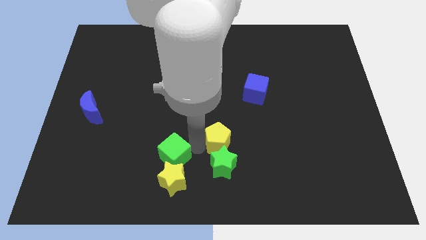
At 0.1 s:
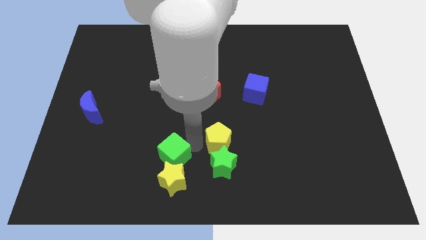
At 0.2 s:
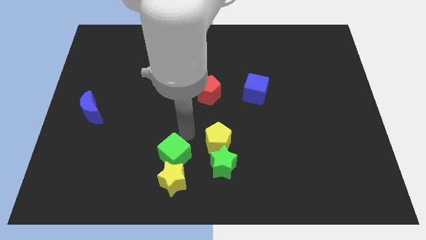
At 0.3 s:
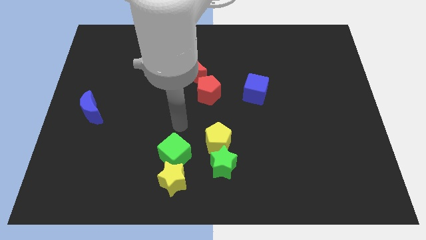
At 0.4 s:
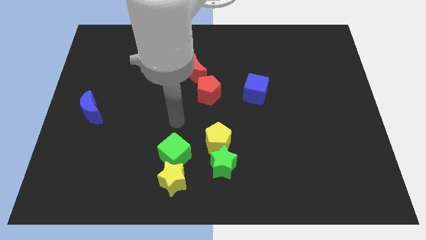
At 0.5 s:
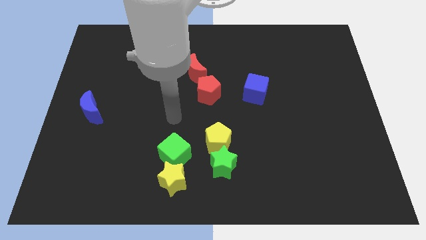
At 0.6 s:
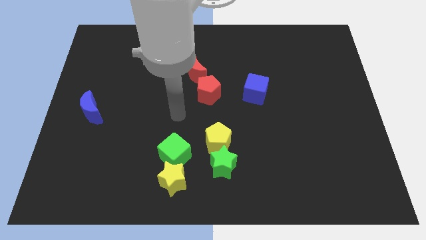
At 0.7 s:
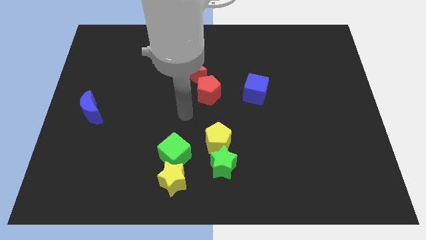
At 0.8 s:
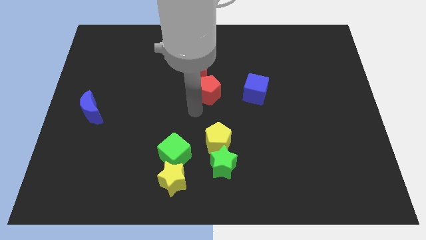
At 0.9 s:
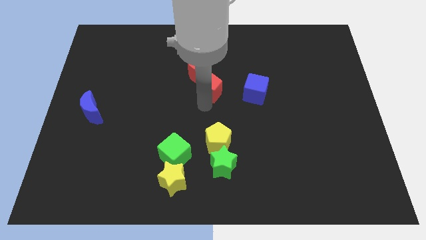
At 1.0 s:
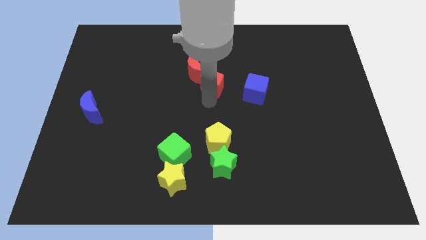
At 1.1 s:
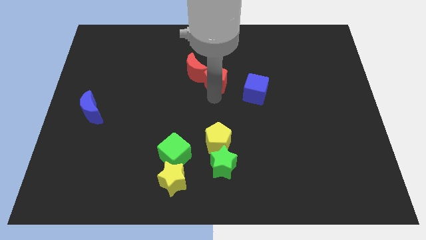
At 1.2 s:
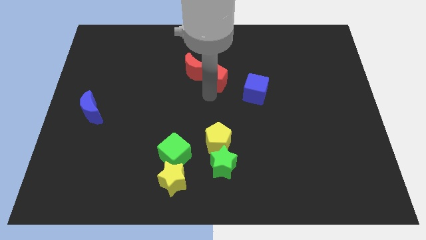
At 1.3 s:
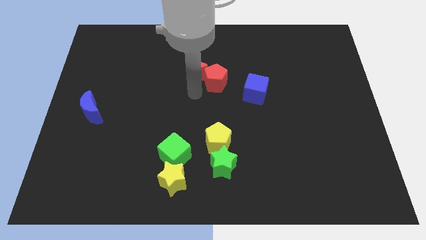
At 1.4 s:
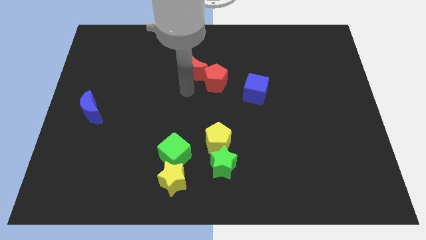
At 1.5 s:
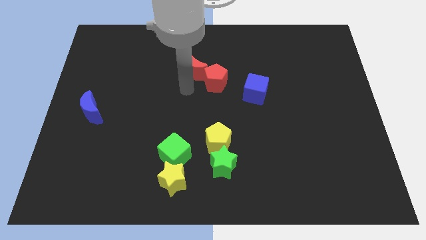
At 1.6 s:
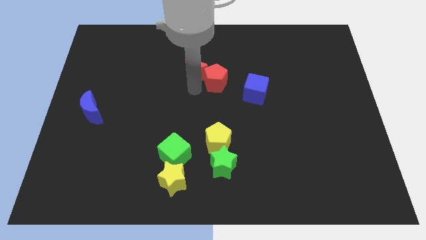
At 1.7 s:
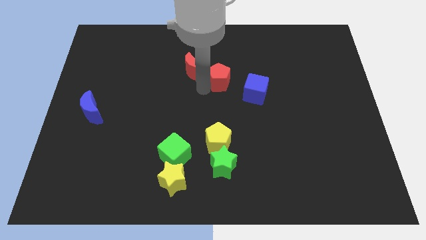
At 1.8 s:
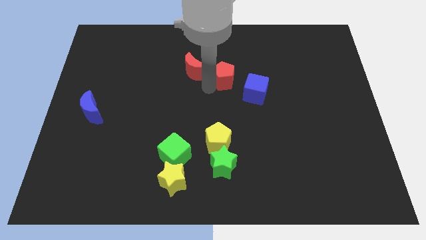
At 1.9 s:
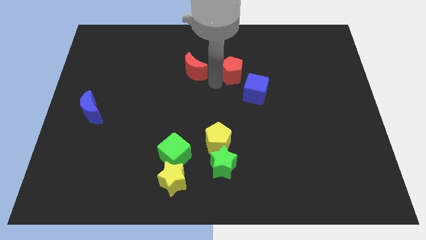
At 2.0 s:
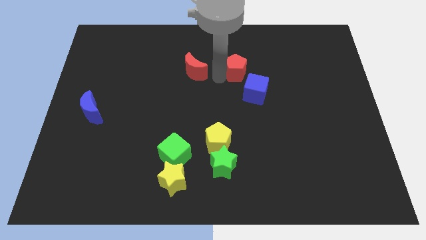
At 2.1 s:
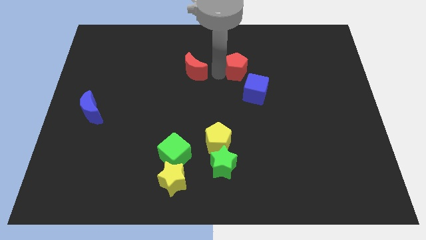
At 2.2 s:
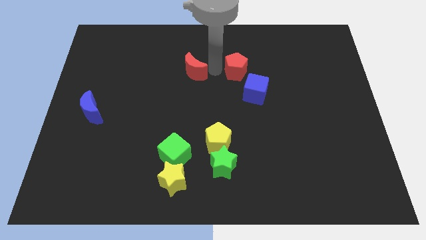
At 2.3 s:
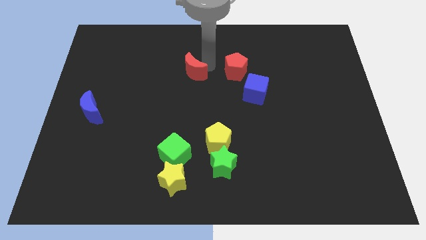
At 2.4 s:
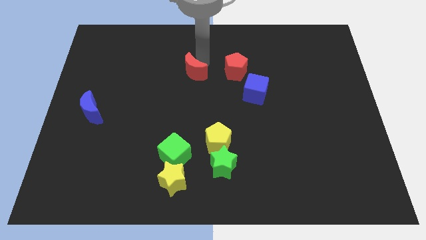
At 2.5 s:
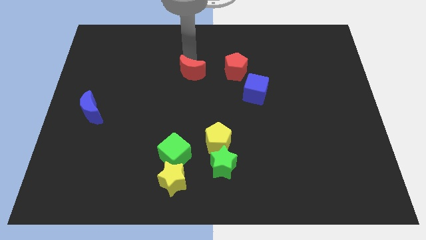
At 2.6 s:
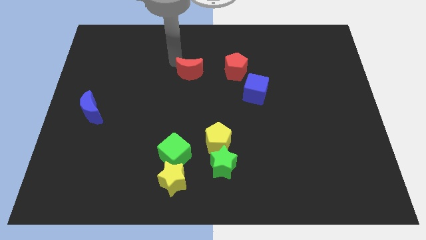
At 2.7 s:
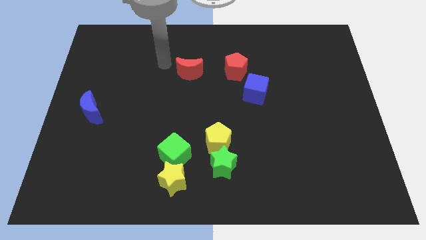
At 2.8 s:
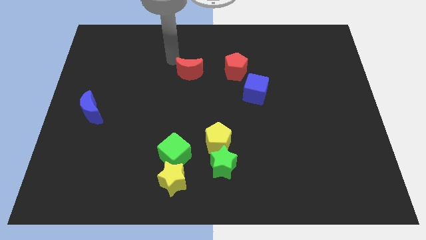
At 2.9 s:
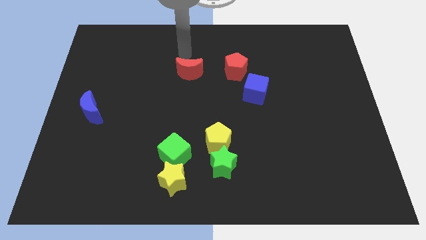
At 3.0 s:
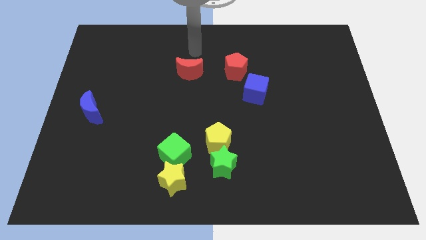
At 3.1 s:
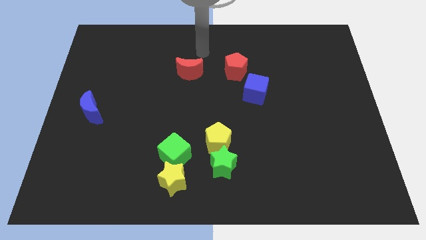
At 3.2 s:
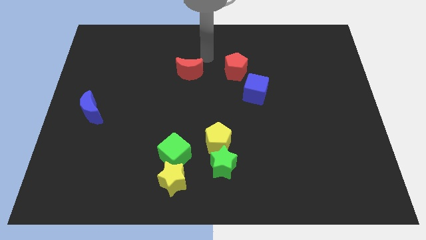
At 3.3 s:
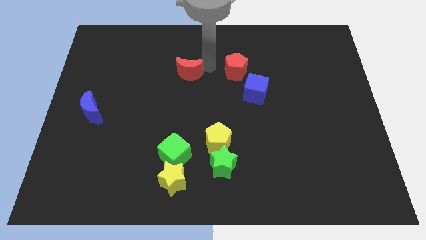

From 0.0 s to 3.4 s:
slightly push the red pentagon towrads the blue cube

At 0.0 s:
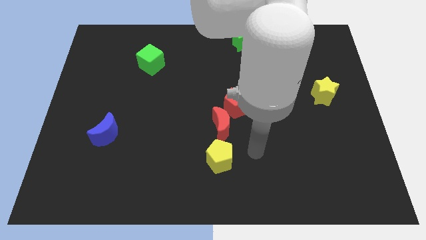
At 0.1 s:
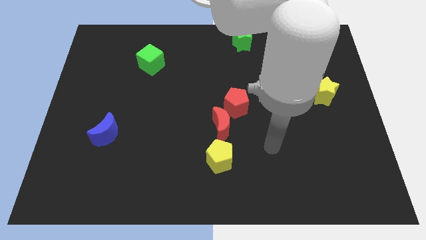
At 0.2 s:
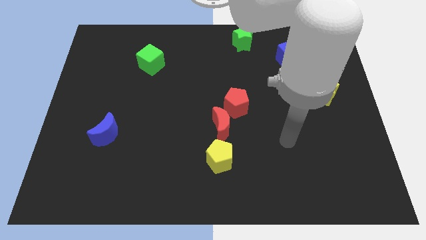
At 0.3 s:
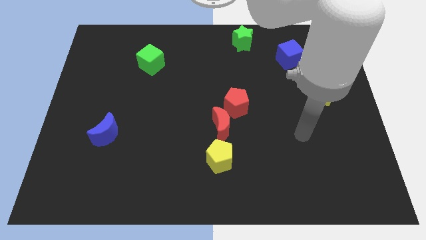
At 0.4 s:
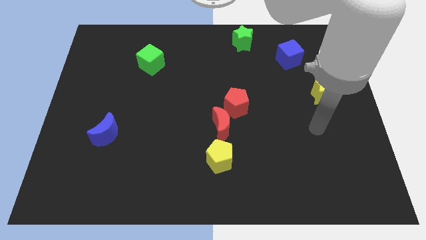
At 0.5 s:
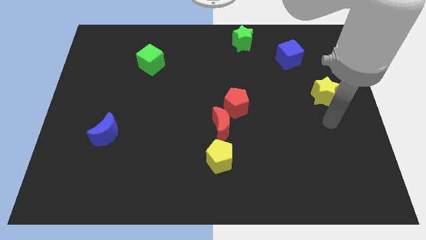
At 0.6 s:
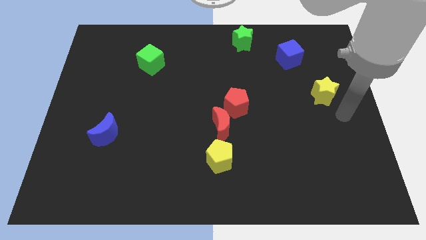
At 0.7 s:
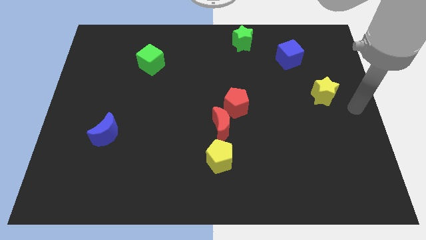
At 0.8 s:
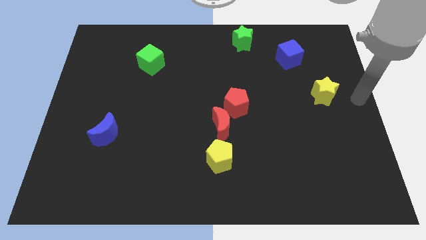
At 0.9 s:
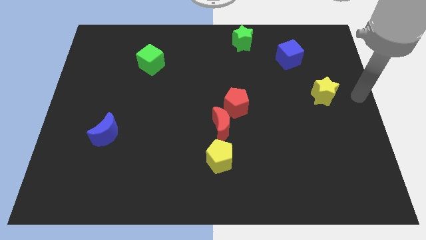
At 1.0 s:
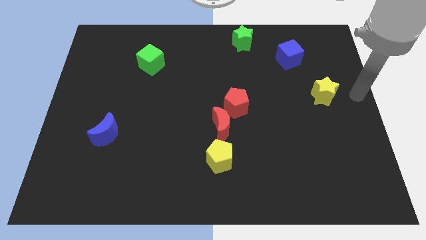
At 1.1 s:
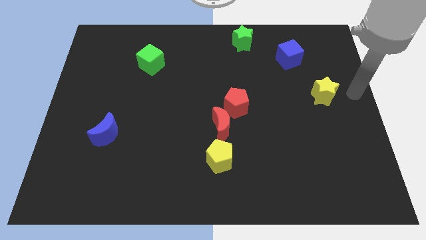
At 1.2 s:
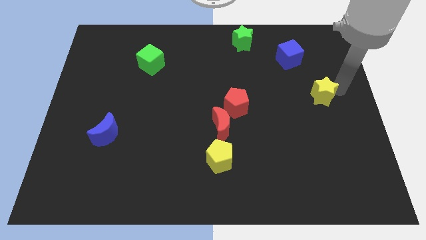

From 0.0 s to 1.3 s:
point the arm to the right of the yellow star

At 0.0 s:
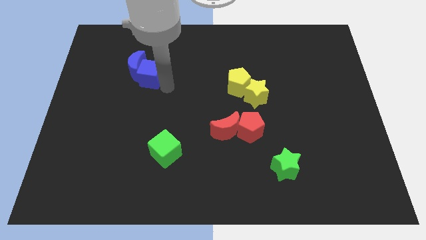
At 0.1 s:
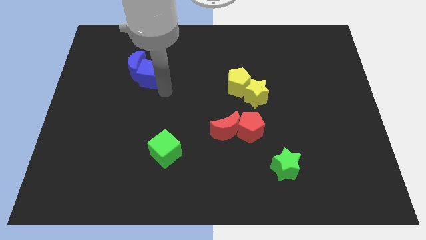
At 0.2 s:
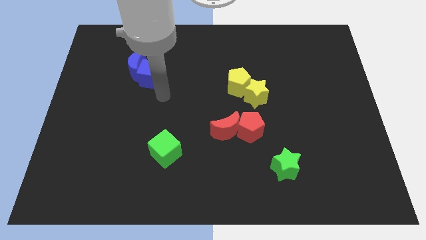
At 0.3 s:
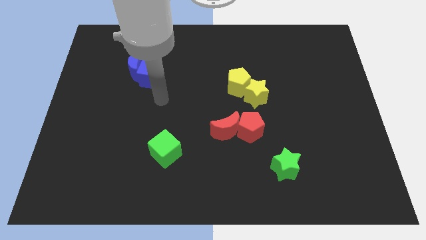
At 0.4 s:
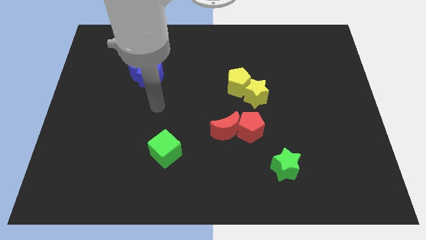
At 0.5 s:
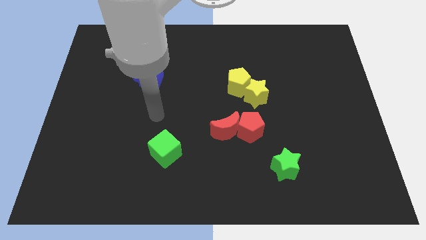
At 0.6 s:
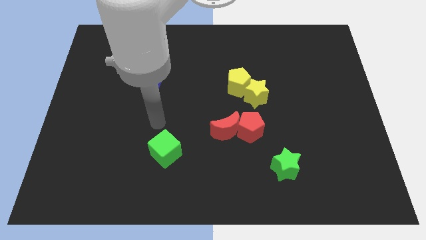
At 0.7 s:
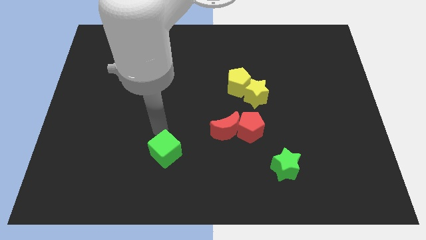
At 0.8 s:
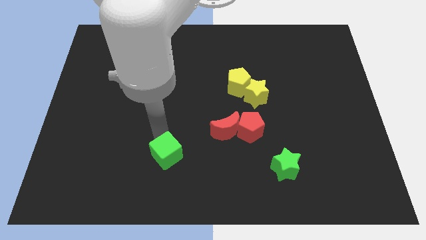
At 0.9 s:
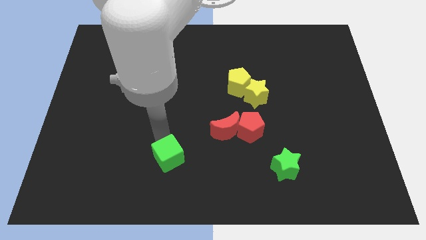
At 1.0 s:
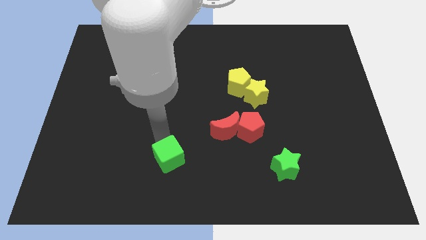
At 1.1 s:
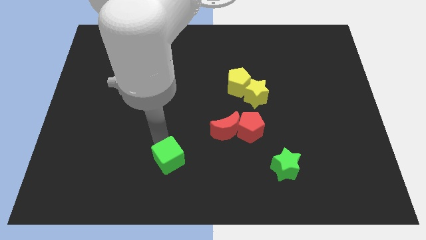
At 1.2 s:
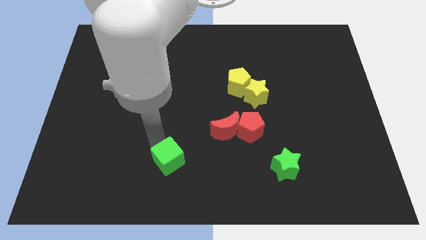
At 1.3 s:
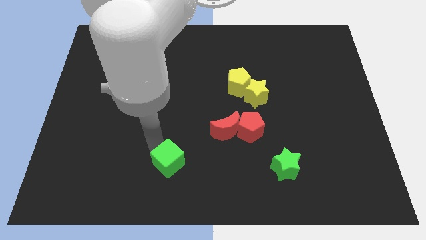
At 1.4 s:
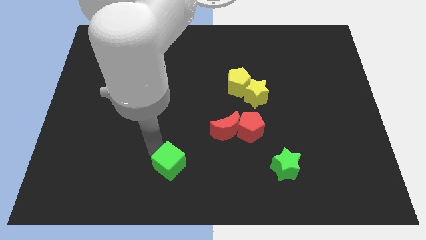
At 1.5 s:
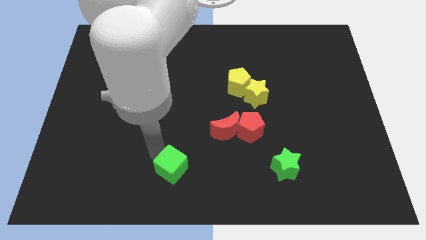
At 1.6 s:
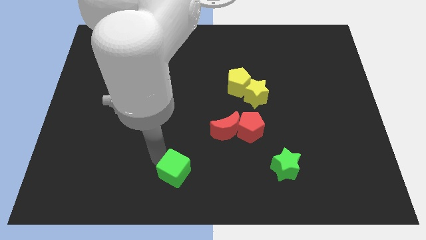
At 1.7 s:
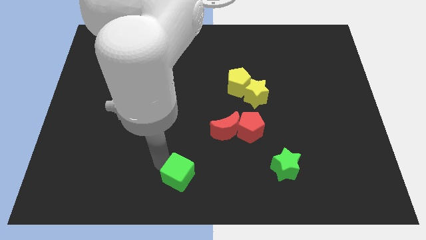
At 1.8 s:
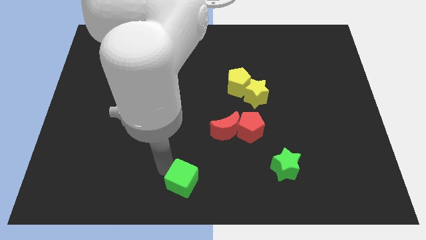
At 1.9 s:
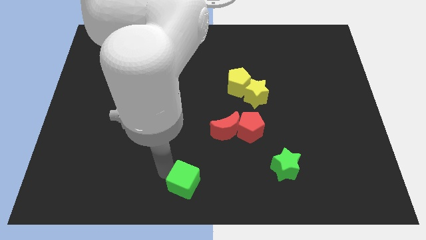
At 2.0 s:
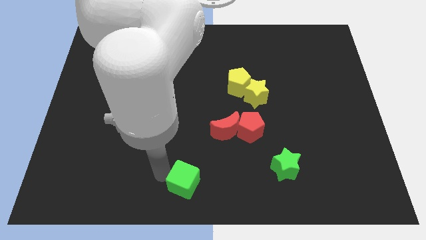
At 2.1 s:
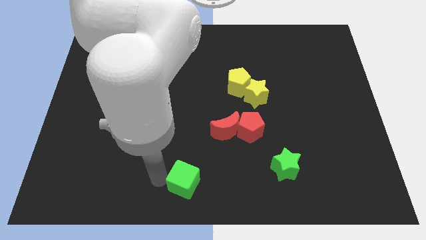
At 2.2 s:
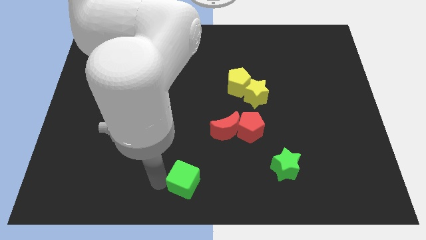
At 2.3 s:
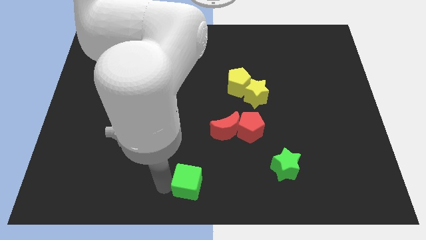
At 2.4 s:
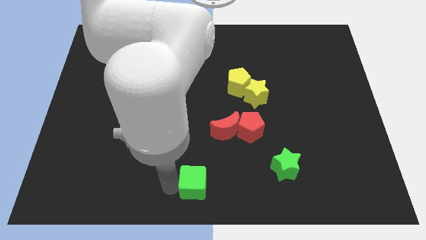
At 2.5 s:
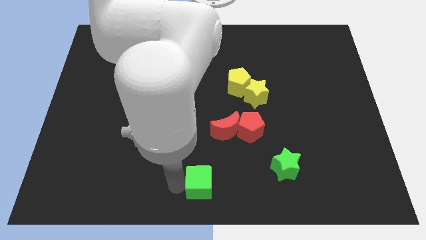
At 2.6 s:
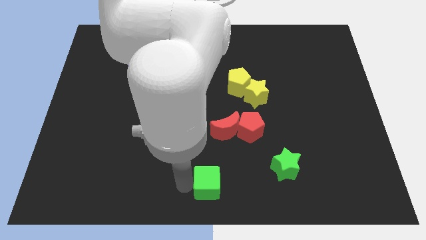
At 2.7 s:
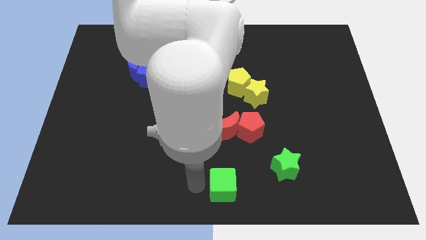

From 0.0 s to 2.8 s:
move the green cube to the bottom centre of the board

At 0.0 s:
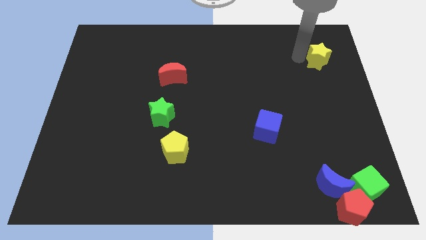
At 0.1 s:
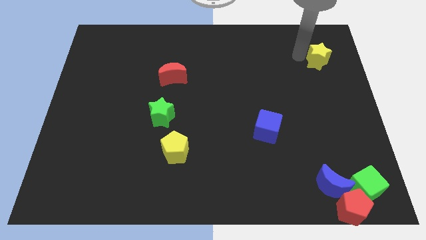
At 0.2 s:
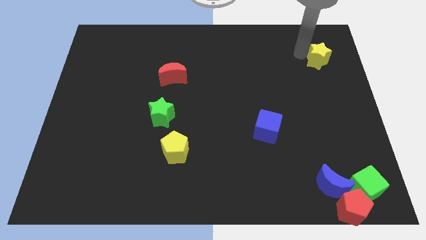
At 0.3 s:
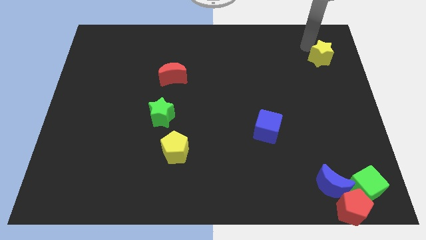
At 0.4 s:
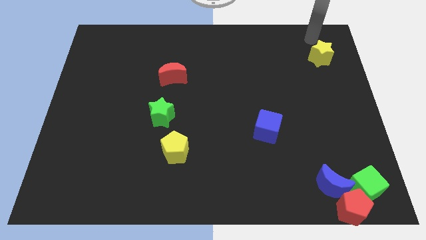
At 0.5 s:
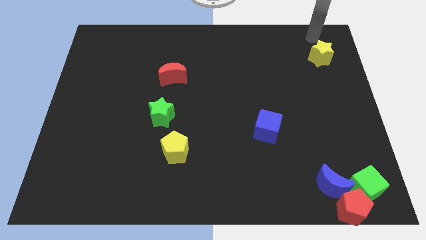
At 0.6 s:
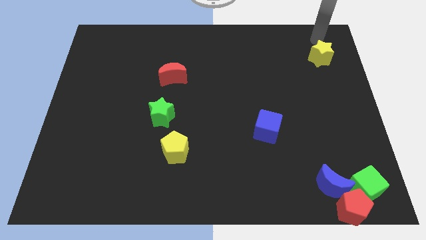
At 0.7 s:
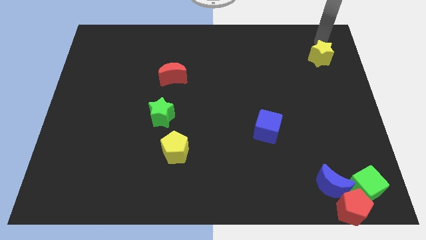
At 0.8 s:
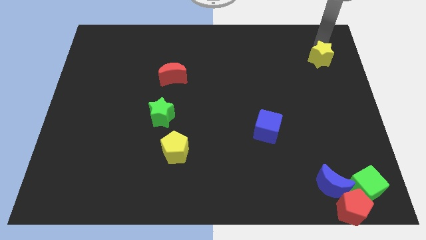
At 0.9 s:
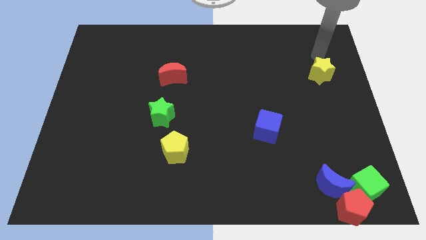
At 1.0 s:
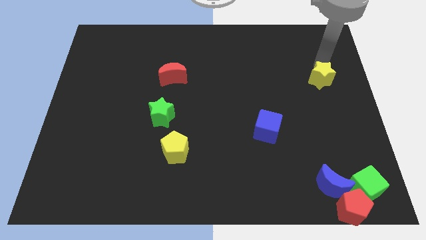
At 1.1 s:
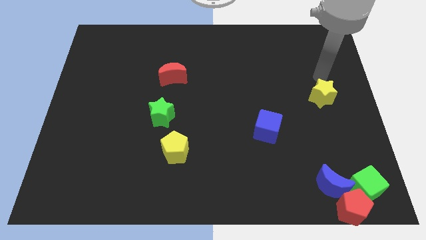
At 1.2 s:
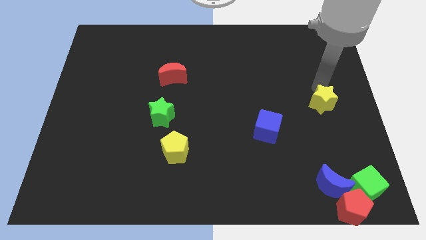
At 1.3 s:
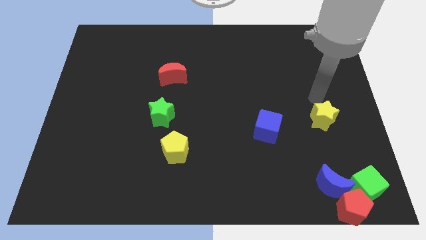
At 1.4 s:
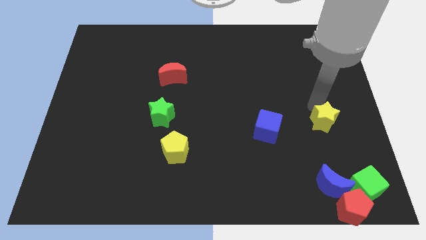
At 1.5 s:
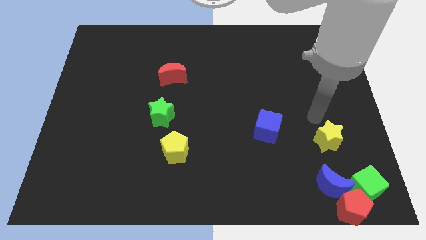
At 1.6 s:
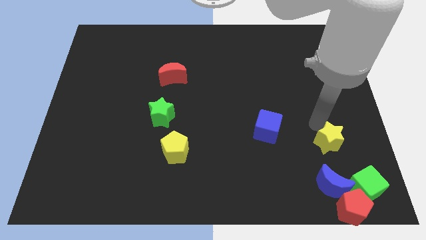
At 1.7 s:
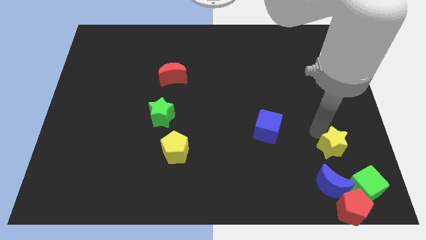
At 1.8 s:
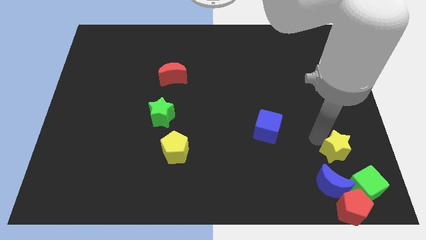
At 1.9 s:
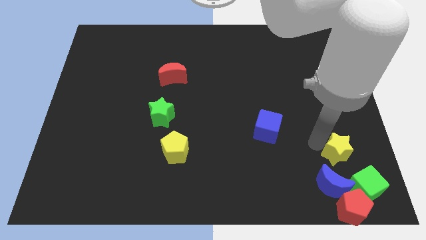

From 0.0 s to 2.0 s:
place the yellow star close to the blue moon
